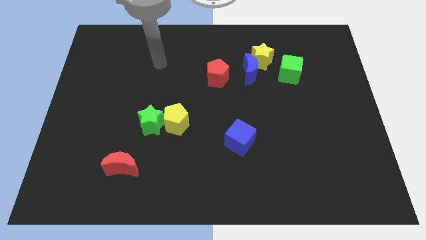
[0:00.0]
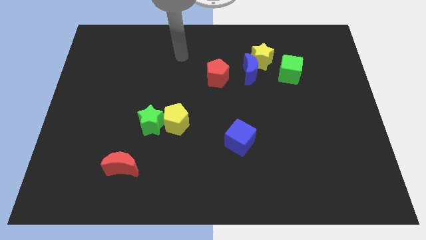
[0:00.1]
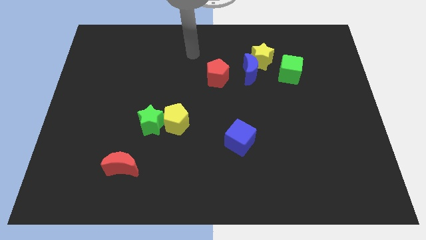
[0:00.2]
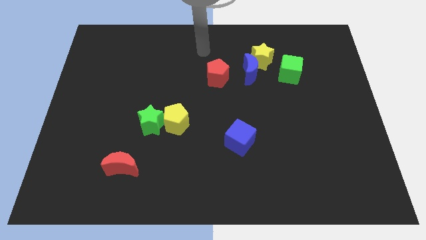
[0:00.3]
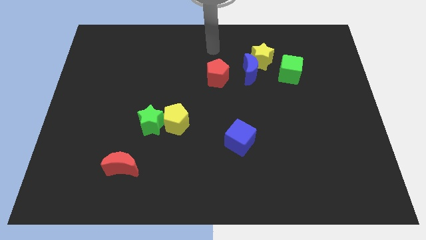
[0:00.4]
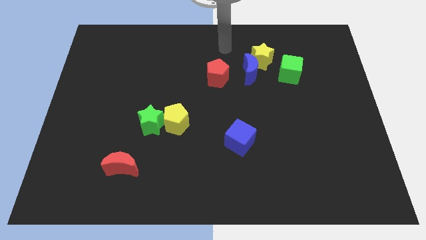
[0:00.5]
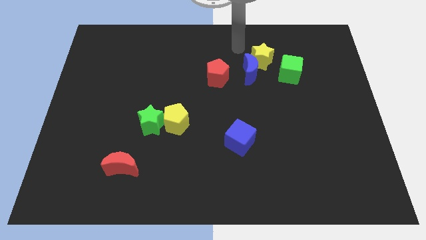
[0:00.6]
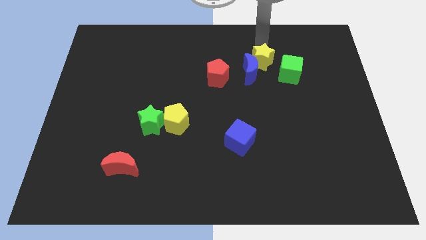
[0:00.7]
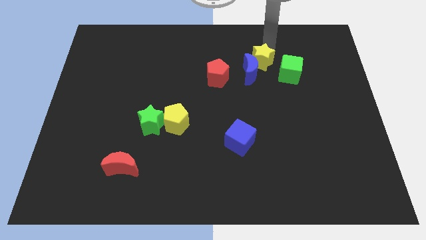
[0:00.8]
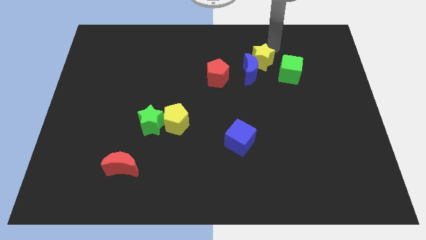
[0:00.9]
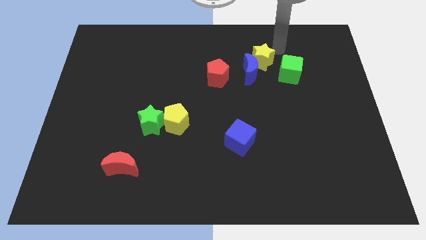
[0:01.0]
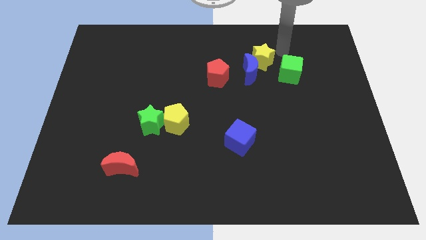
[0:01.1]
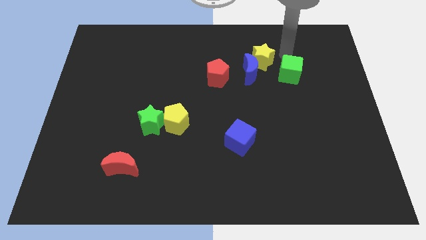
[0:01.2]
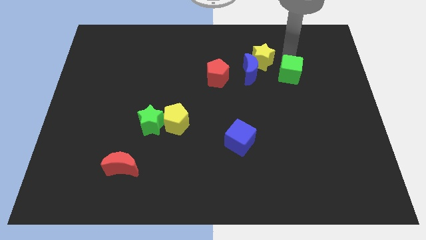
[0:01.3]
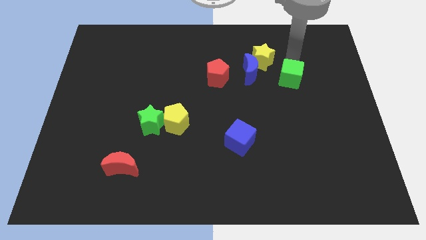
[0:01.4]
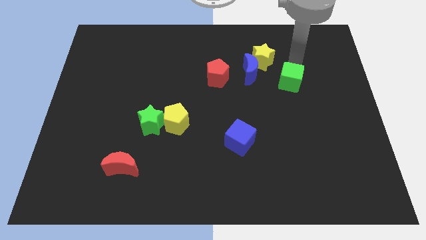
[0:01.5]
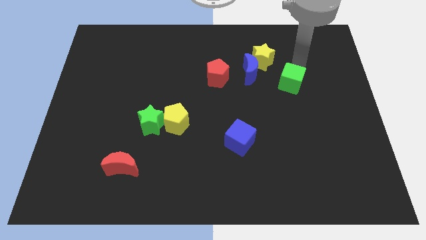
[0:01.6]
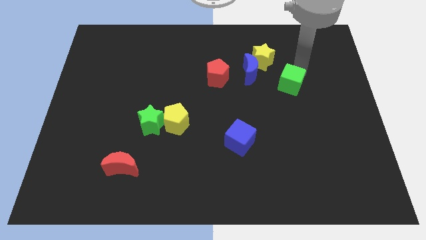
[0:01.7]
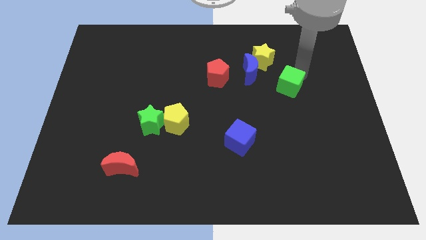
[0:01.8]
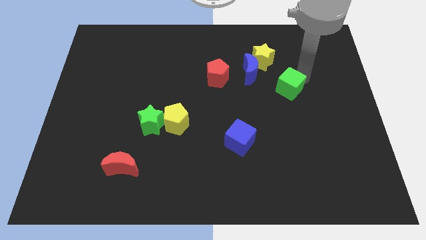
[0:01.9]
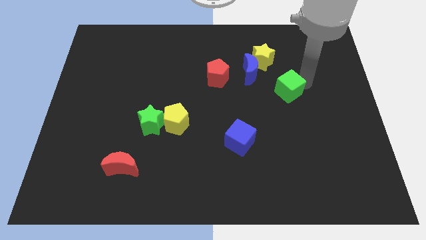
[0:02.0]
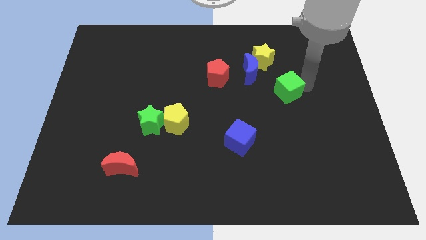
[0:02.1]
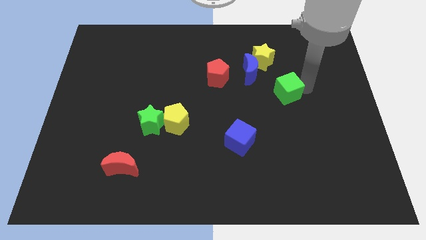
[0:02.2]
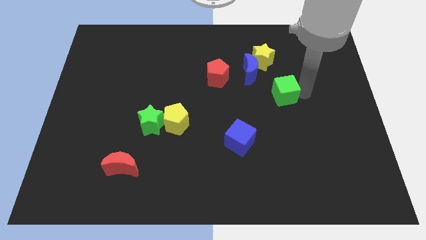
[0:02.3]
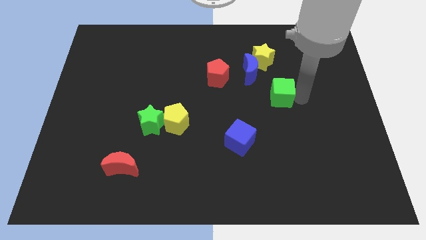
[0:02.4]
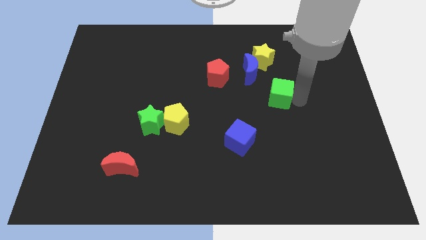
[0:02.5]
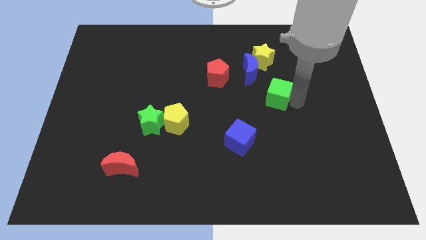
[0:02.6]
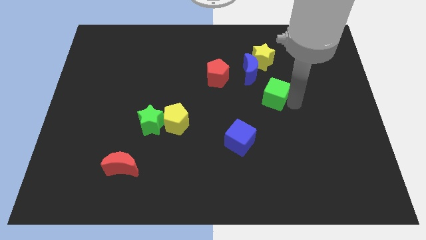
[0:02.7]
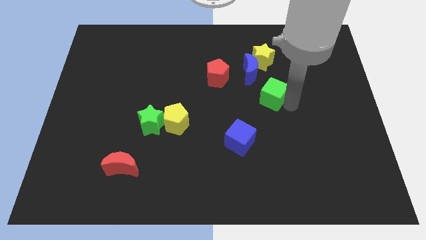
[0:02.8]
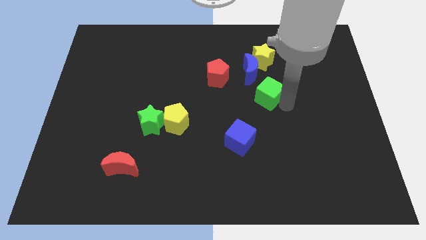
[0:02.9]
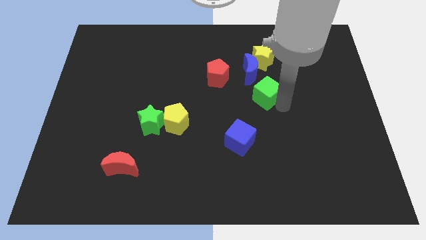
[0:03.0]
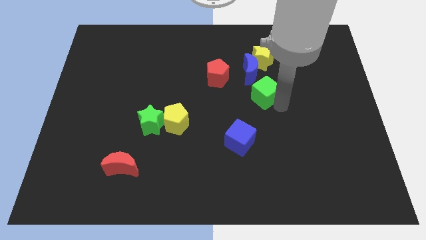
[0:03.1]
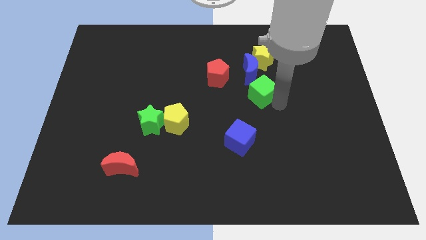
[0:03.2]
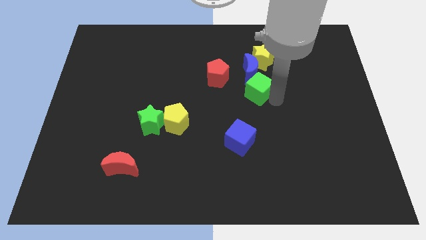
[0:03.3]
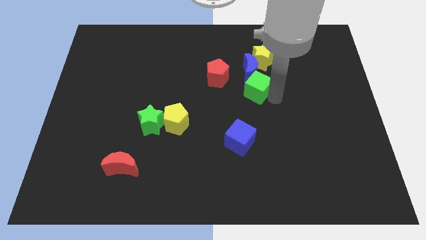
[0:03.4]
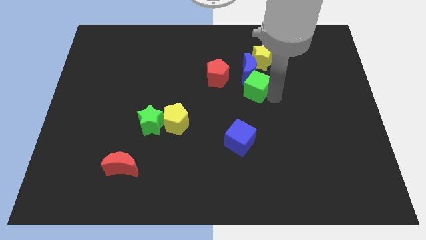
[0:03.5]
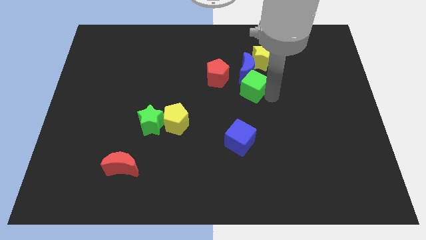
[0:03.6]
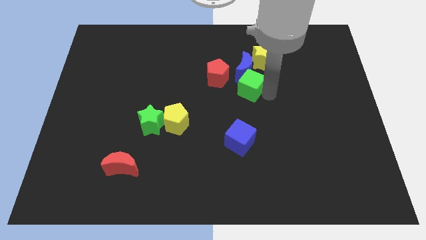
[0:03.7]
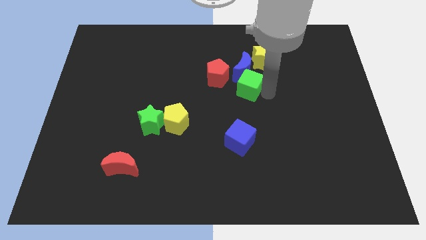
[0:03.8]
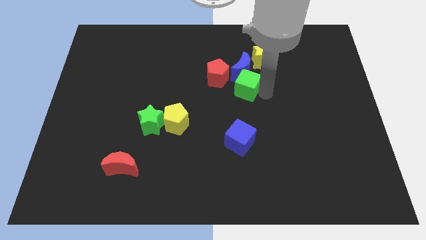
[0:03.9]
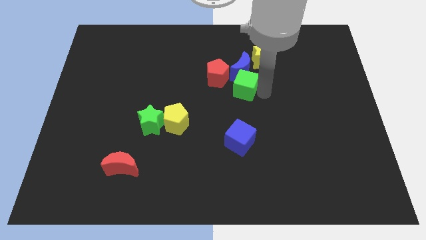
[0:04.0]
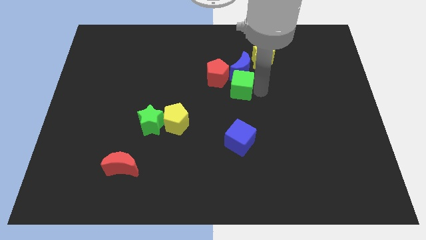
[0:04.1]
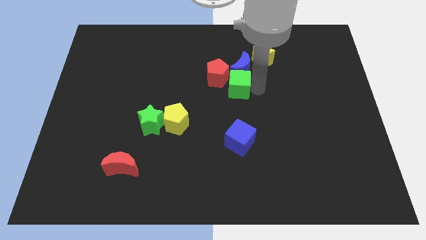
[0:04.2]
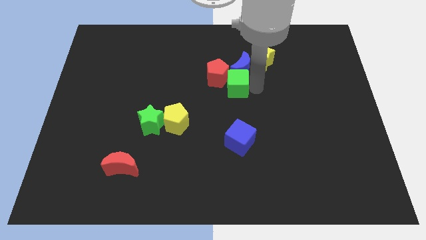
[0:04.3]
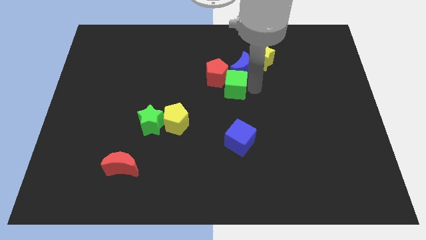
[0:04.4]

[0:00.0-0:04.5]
move the green cube next to the red pentagon

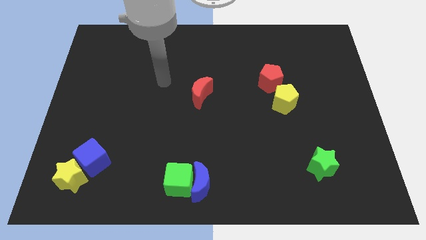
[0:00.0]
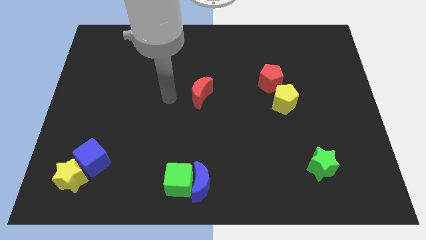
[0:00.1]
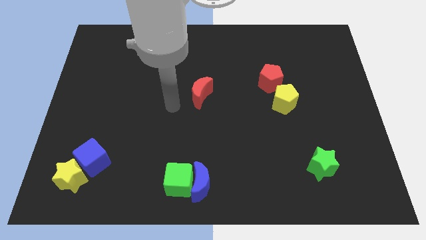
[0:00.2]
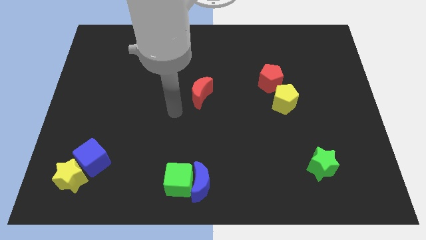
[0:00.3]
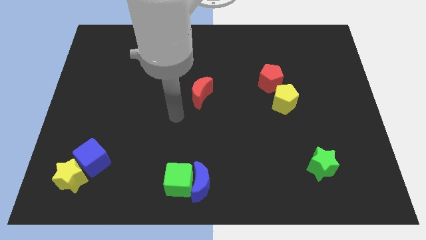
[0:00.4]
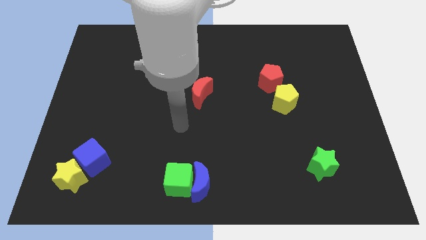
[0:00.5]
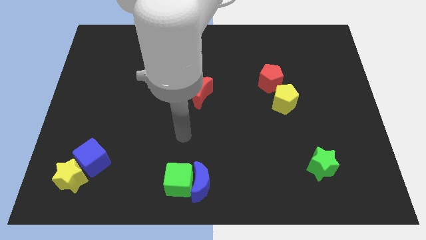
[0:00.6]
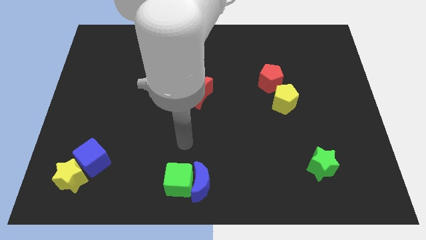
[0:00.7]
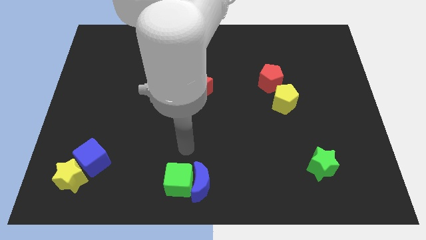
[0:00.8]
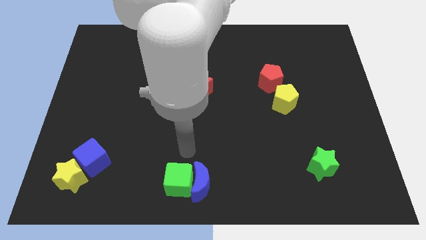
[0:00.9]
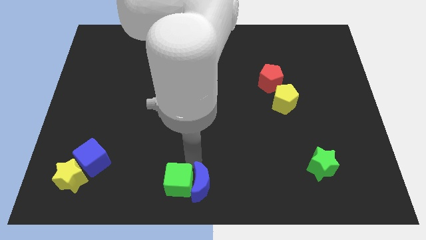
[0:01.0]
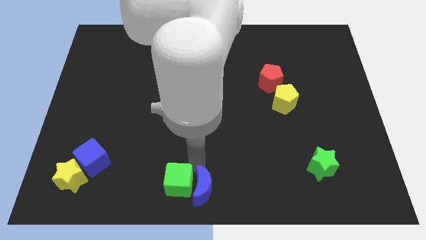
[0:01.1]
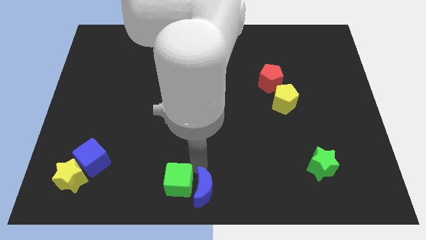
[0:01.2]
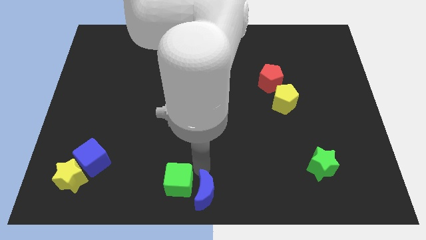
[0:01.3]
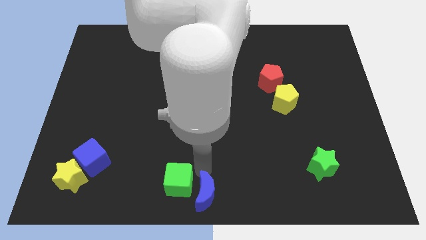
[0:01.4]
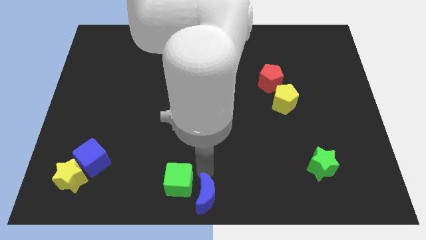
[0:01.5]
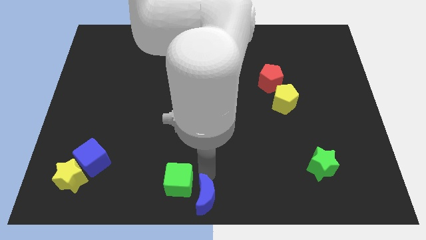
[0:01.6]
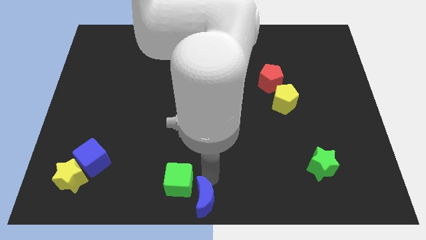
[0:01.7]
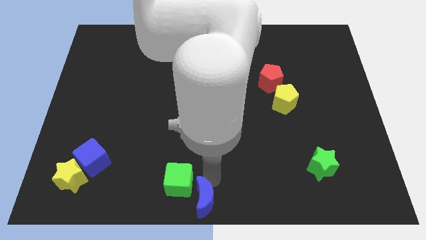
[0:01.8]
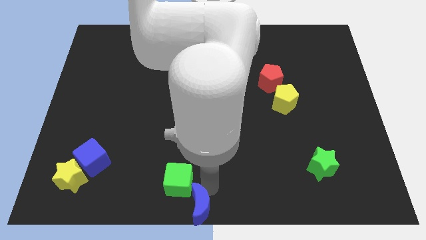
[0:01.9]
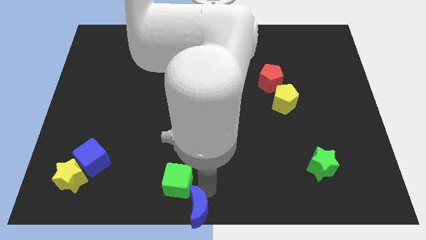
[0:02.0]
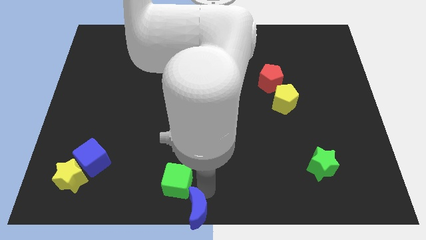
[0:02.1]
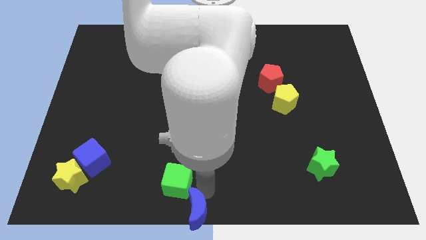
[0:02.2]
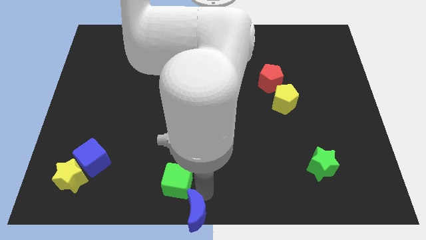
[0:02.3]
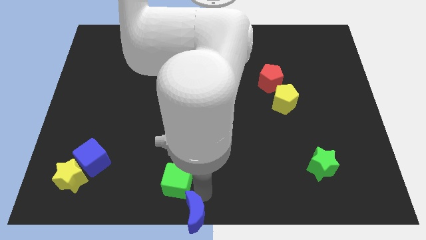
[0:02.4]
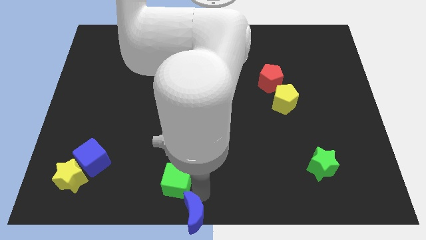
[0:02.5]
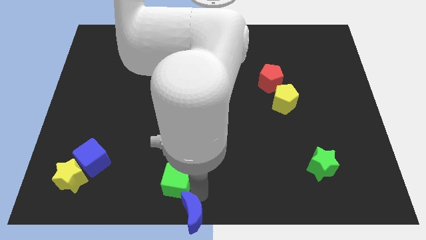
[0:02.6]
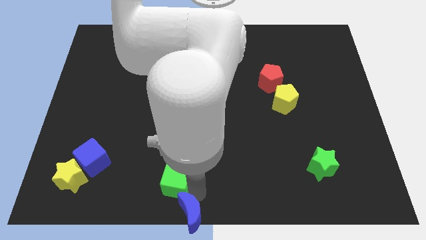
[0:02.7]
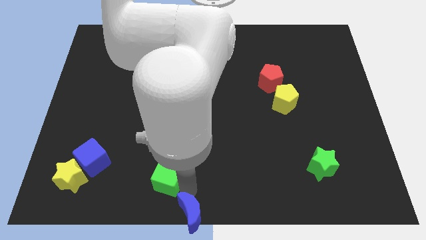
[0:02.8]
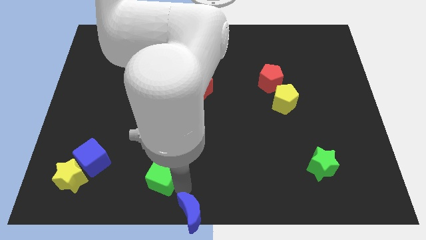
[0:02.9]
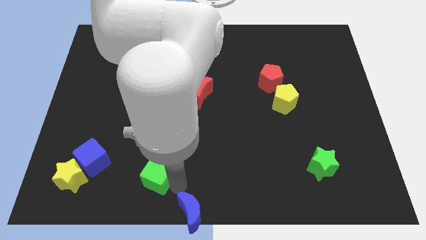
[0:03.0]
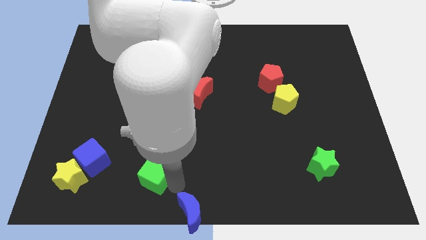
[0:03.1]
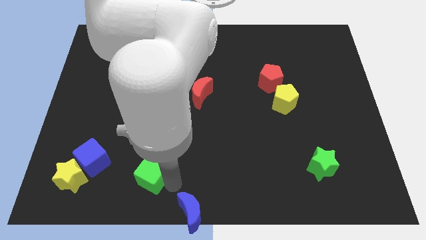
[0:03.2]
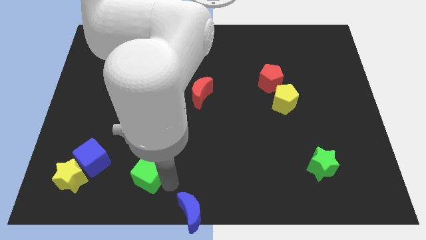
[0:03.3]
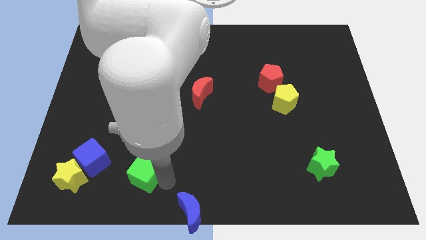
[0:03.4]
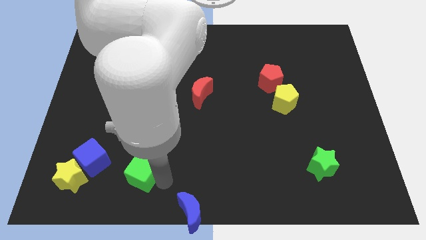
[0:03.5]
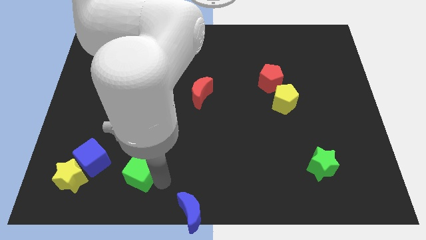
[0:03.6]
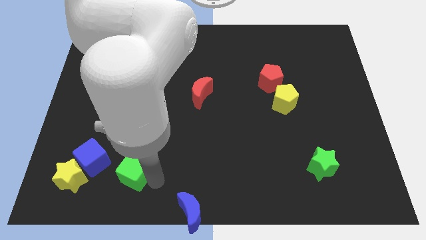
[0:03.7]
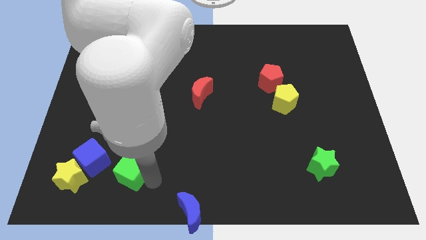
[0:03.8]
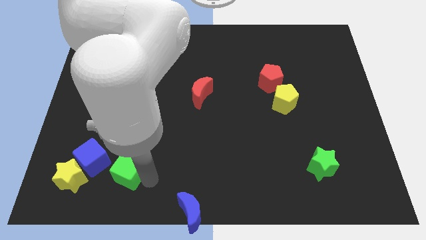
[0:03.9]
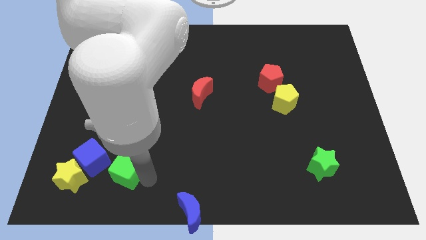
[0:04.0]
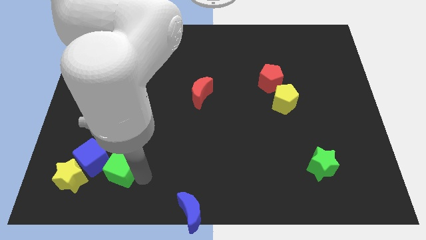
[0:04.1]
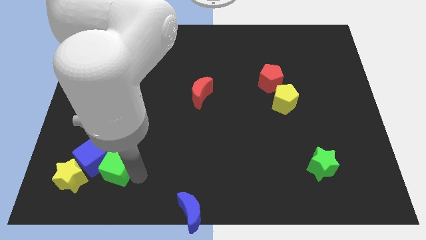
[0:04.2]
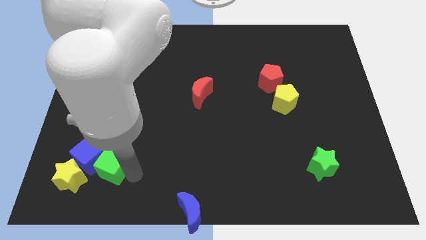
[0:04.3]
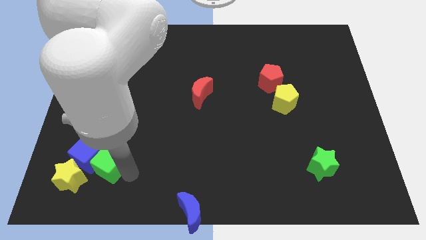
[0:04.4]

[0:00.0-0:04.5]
put the green cube towards the blue cube
